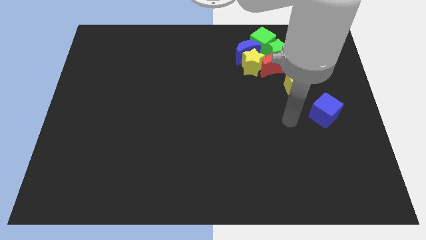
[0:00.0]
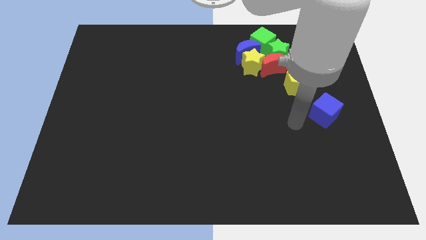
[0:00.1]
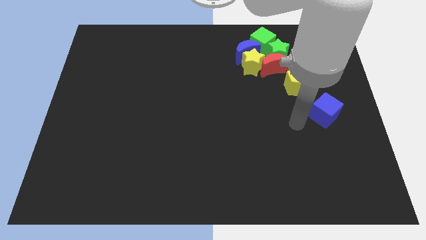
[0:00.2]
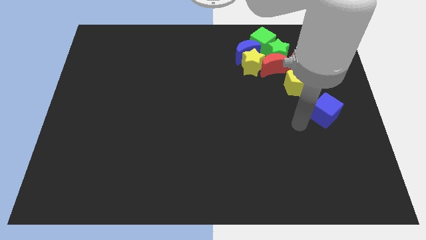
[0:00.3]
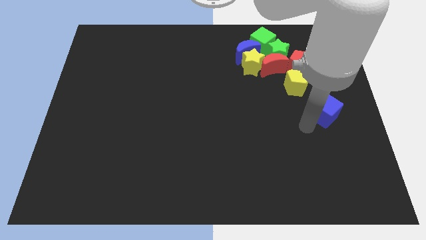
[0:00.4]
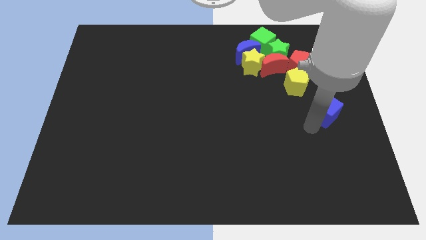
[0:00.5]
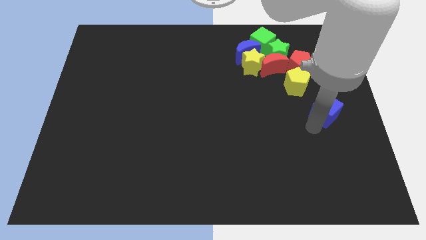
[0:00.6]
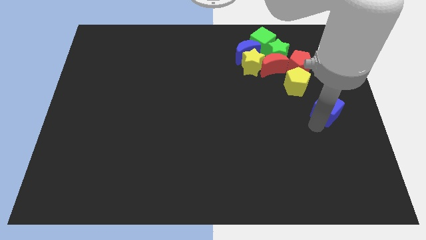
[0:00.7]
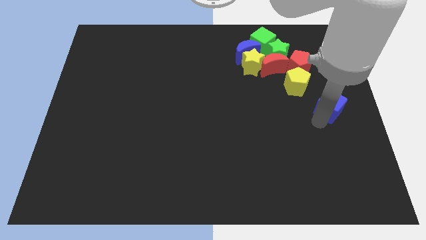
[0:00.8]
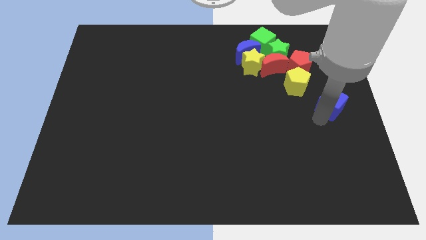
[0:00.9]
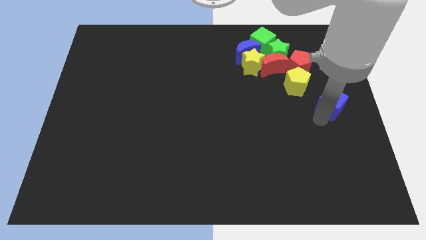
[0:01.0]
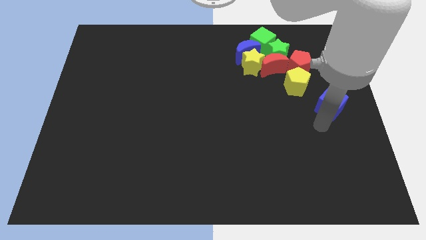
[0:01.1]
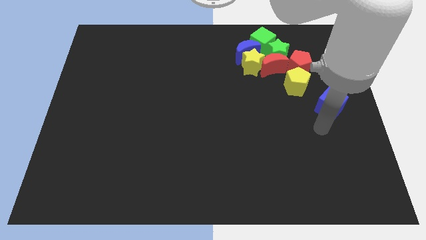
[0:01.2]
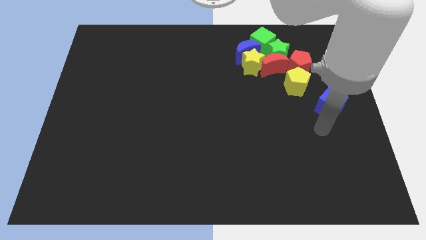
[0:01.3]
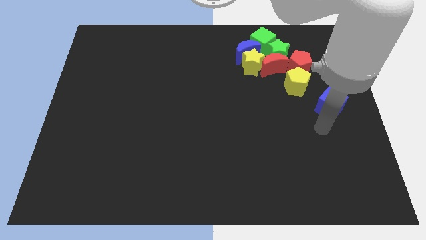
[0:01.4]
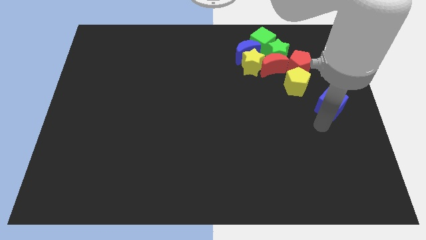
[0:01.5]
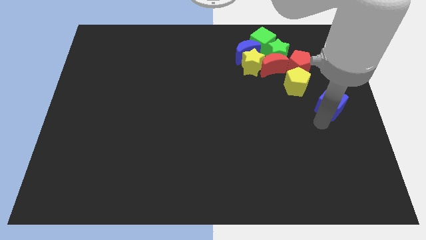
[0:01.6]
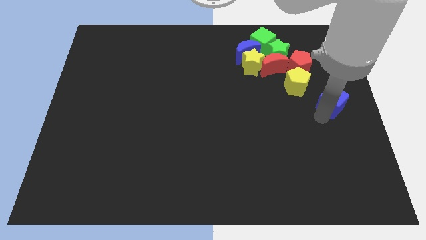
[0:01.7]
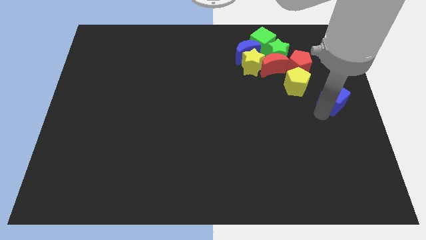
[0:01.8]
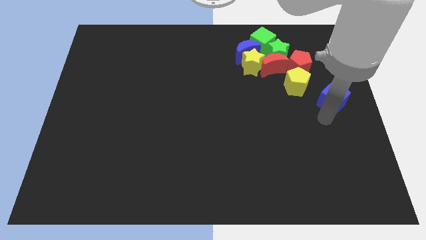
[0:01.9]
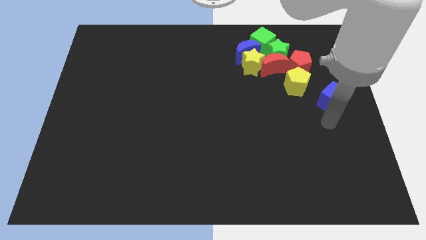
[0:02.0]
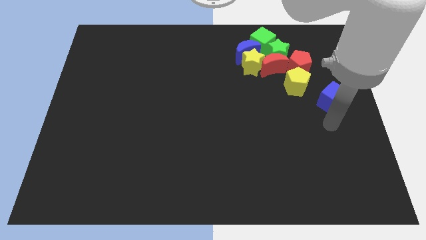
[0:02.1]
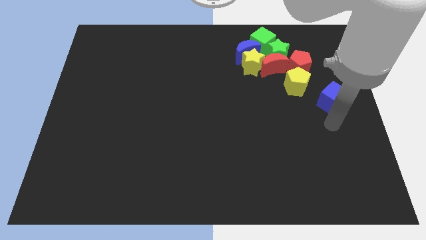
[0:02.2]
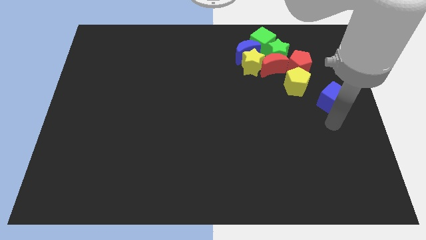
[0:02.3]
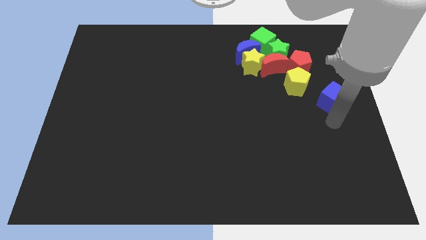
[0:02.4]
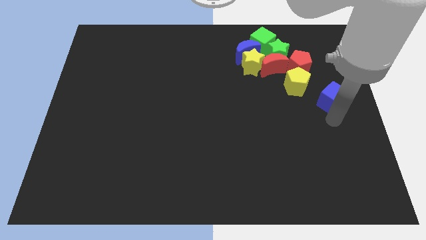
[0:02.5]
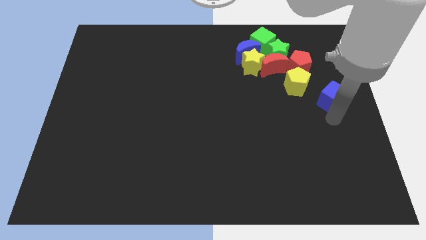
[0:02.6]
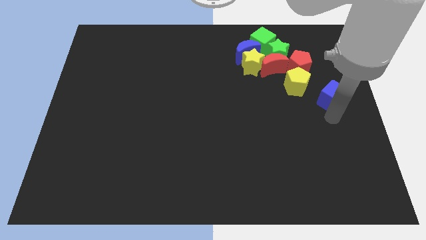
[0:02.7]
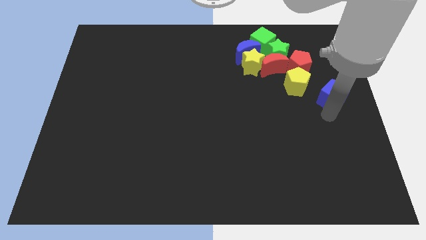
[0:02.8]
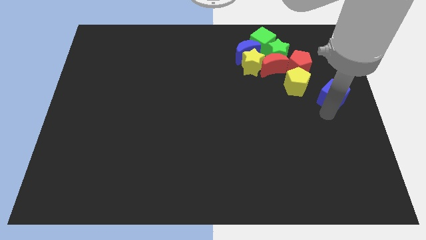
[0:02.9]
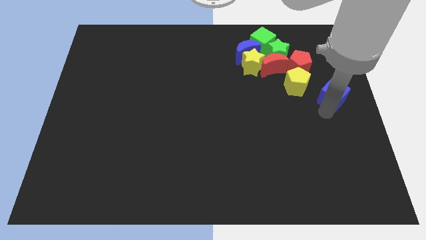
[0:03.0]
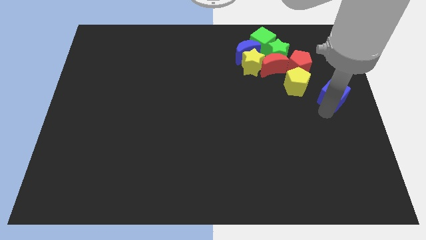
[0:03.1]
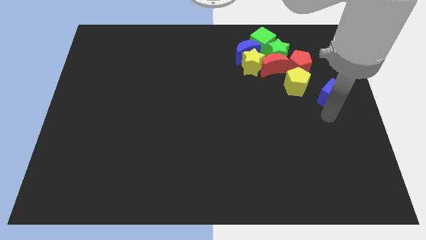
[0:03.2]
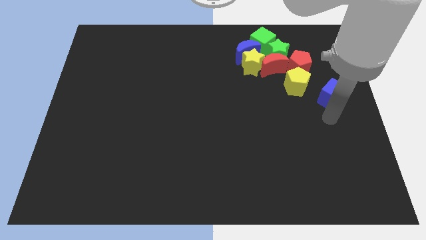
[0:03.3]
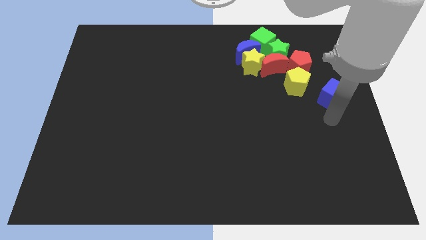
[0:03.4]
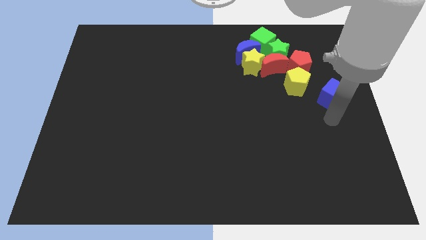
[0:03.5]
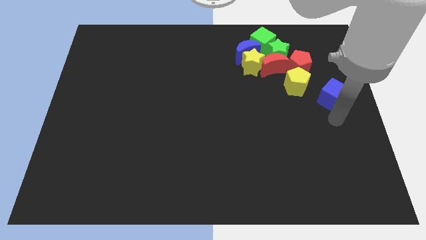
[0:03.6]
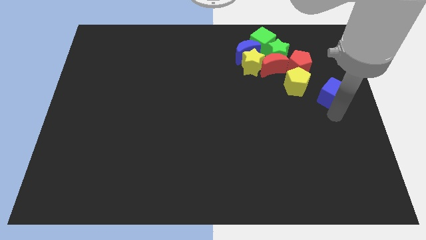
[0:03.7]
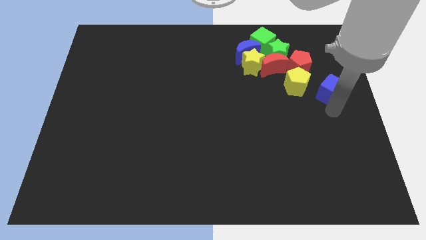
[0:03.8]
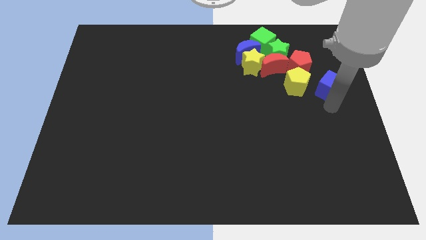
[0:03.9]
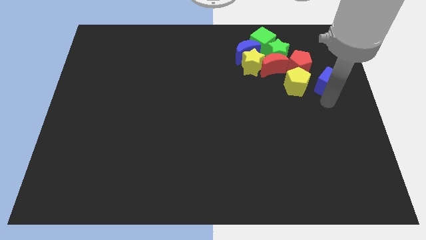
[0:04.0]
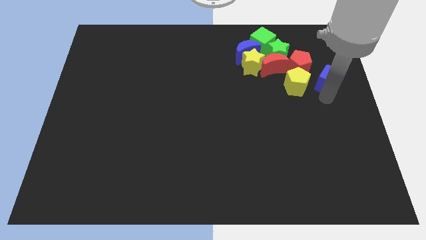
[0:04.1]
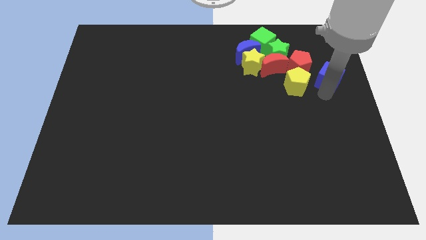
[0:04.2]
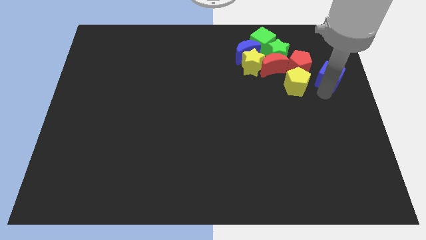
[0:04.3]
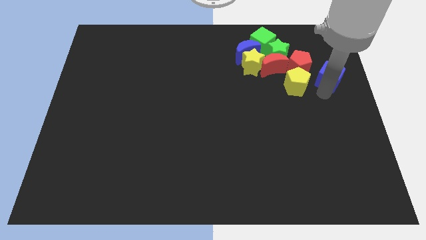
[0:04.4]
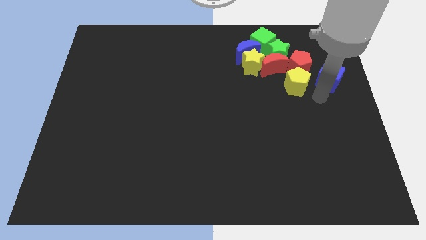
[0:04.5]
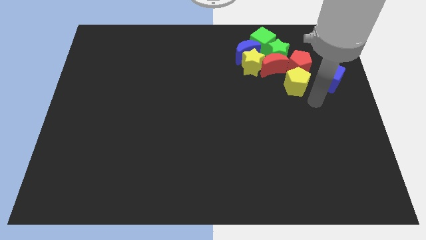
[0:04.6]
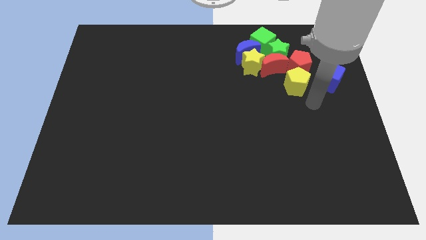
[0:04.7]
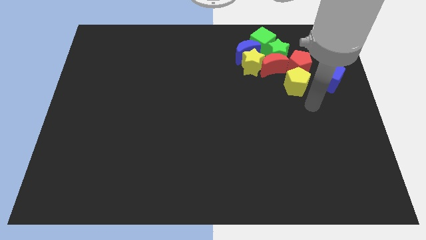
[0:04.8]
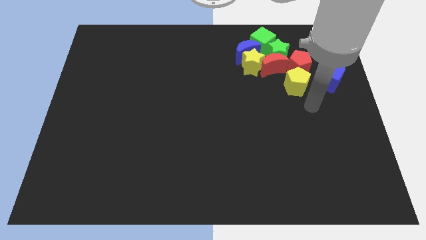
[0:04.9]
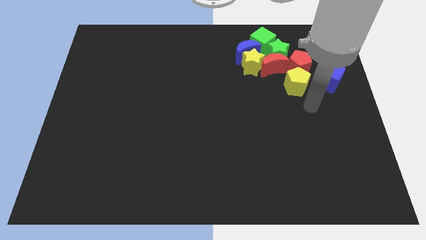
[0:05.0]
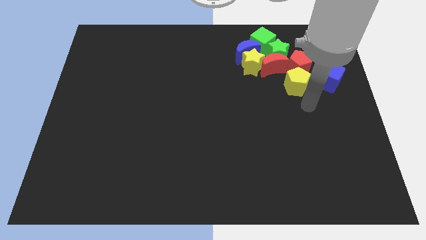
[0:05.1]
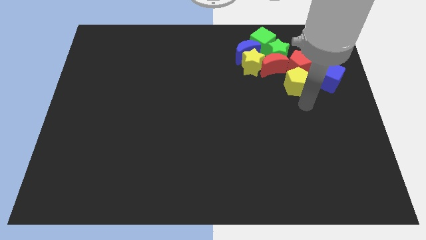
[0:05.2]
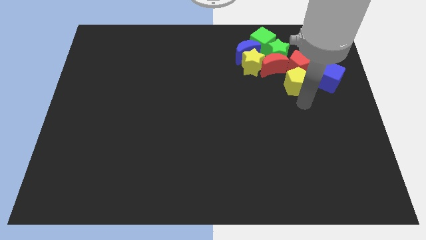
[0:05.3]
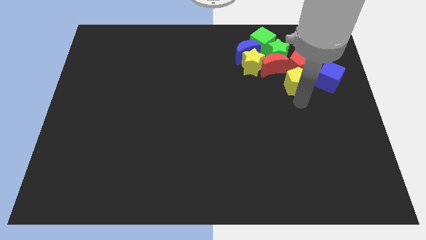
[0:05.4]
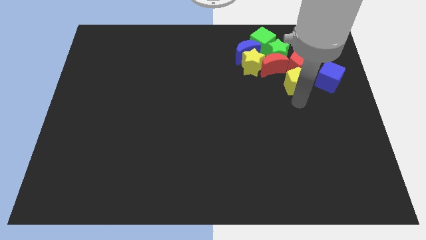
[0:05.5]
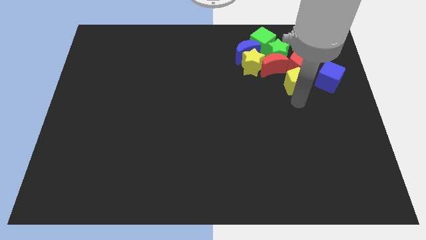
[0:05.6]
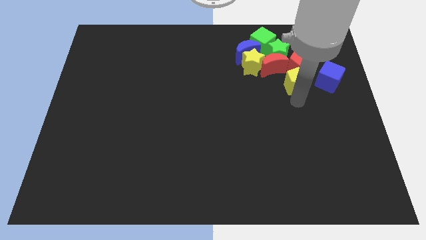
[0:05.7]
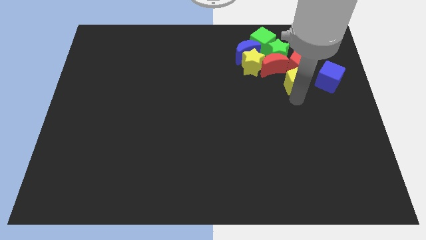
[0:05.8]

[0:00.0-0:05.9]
slightly push the blue cube upwards

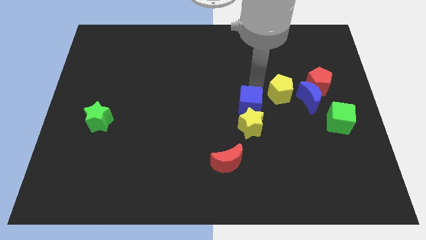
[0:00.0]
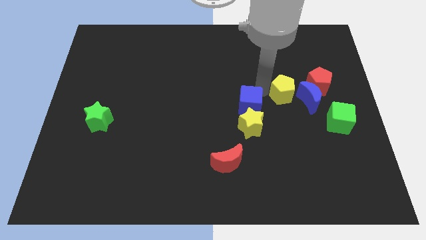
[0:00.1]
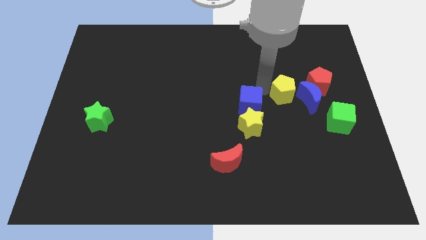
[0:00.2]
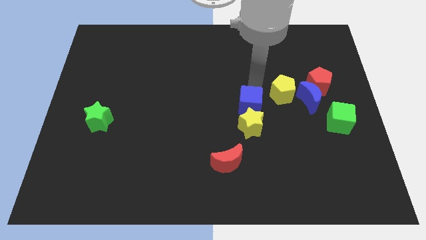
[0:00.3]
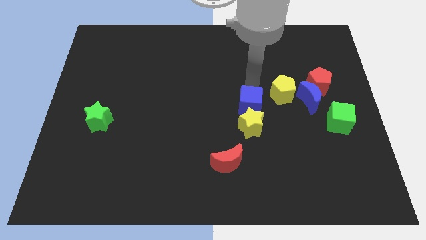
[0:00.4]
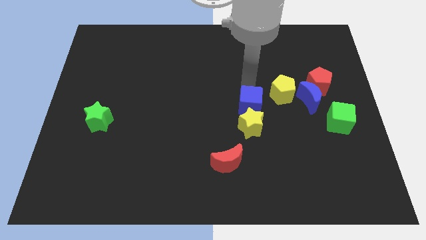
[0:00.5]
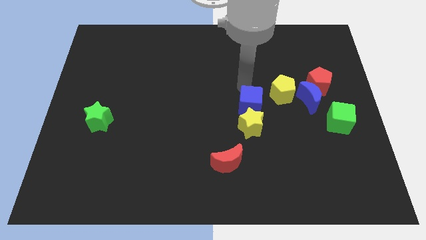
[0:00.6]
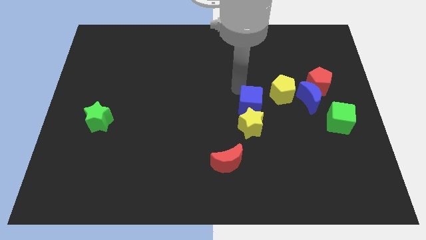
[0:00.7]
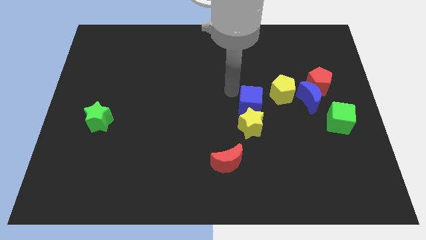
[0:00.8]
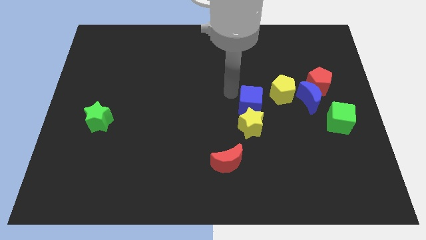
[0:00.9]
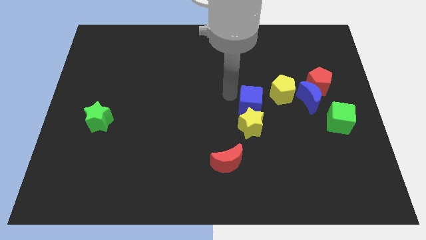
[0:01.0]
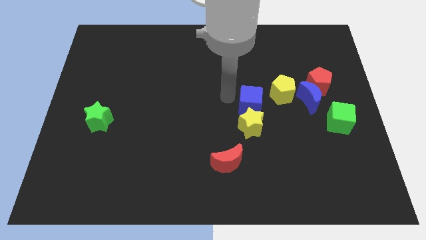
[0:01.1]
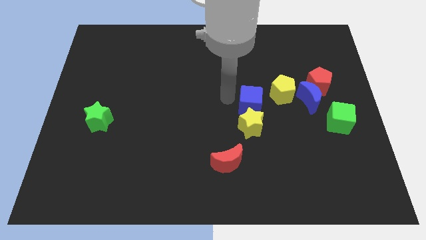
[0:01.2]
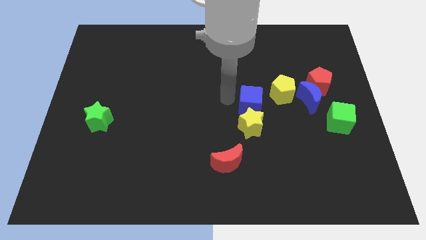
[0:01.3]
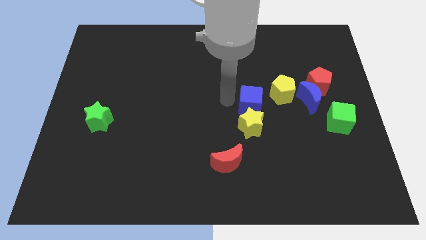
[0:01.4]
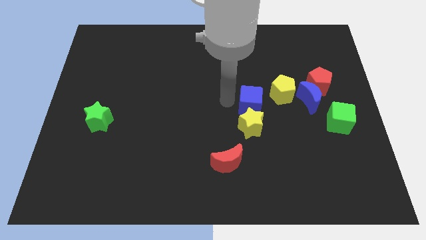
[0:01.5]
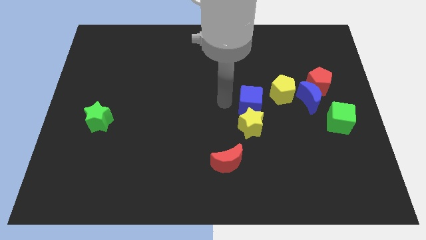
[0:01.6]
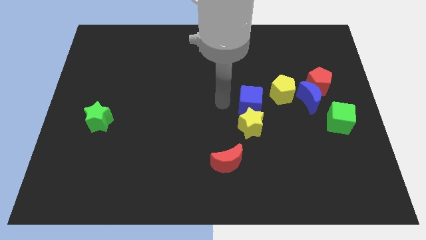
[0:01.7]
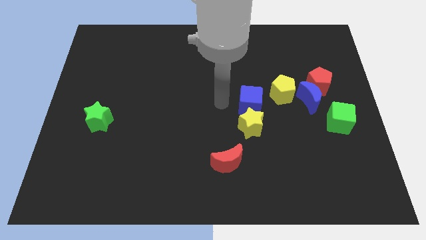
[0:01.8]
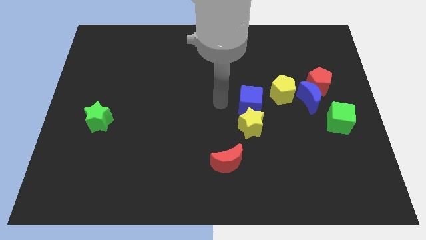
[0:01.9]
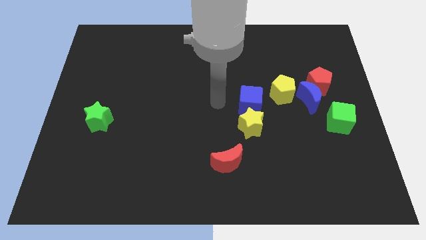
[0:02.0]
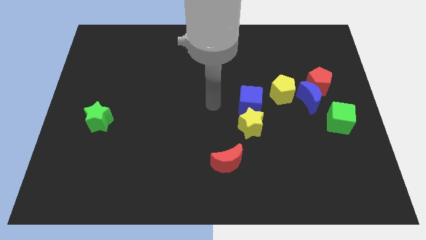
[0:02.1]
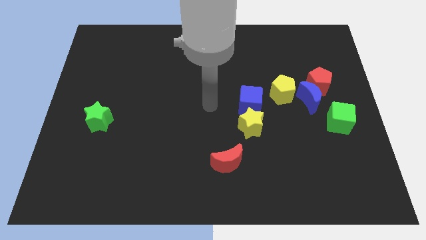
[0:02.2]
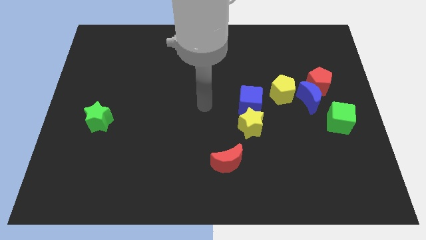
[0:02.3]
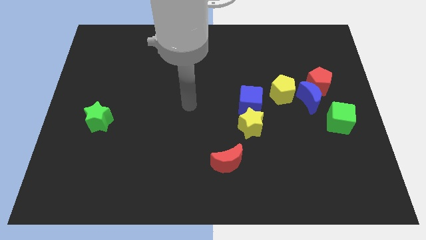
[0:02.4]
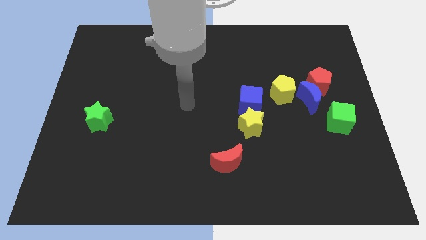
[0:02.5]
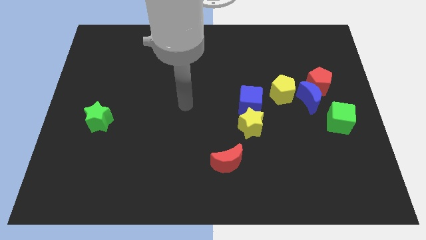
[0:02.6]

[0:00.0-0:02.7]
tap the yellow pentagon

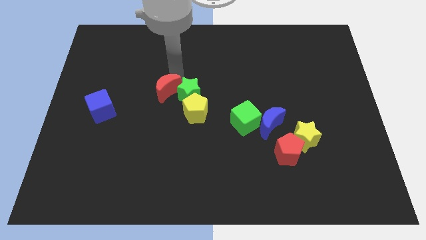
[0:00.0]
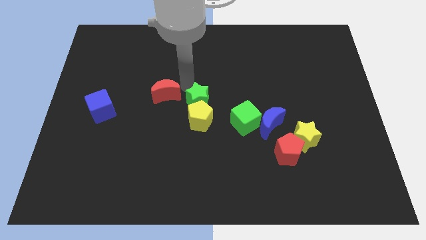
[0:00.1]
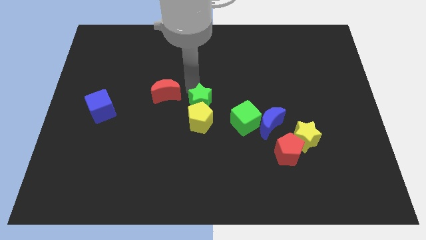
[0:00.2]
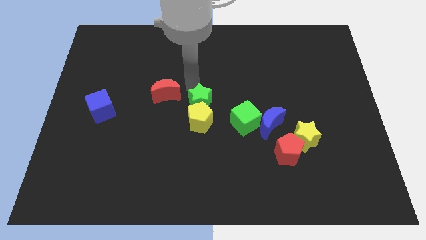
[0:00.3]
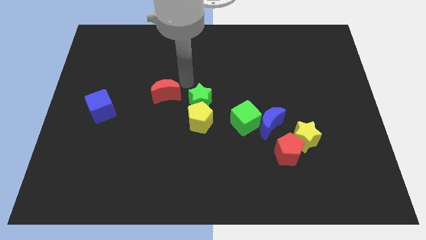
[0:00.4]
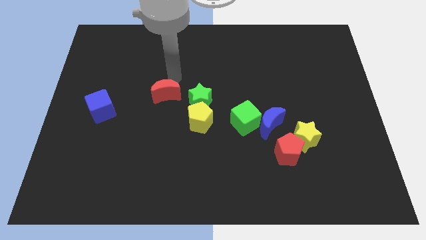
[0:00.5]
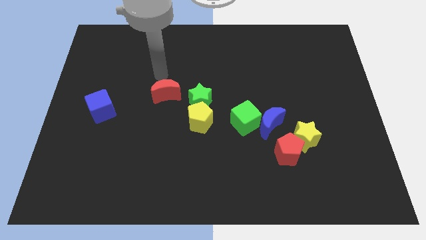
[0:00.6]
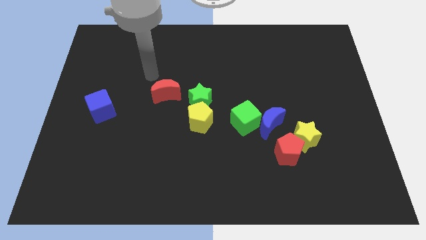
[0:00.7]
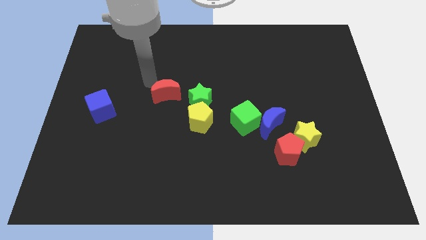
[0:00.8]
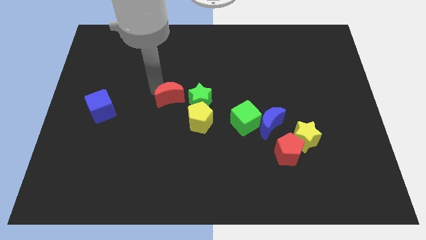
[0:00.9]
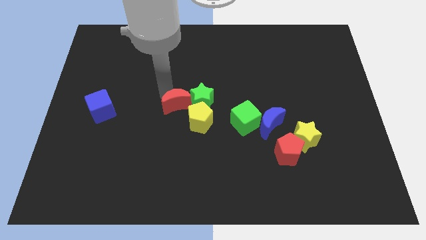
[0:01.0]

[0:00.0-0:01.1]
place the green star at the top of the yellow pentagon
